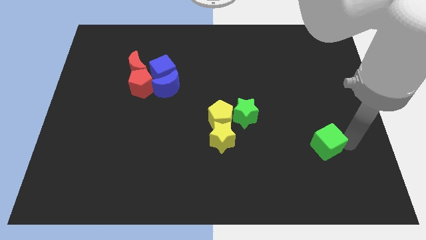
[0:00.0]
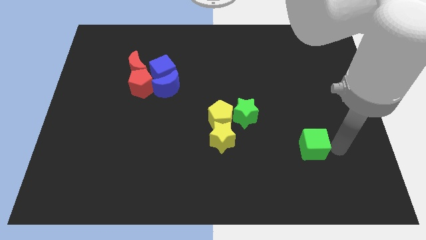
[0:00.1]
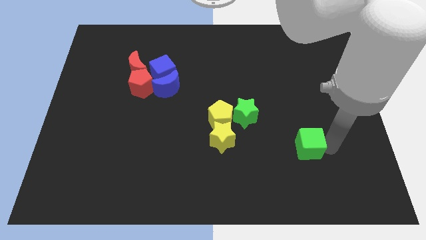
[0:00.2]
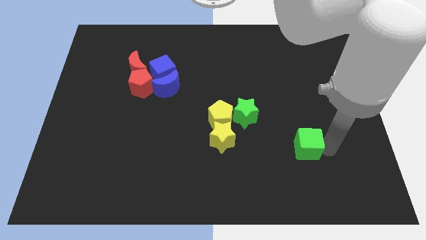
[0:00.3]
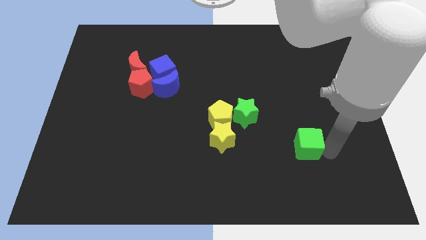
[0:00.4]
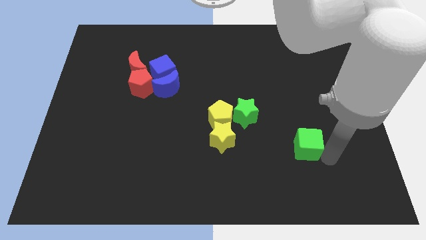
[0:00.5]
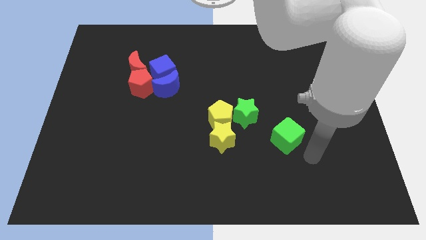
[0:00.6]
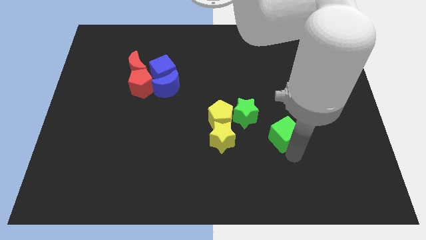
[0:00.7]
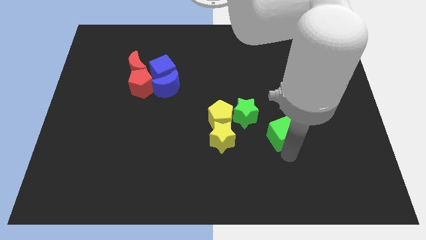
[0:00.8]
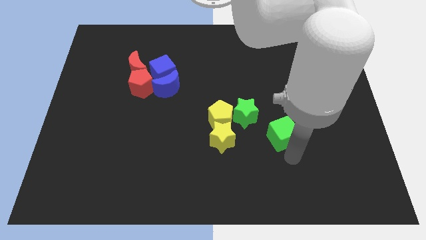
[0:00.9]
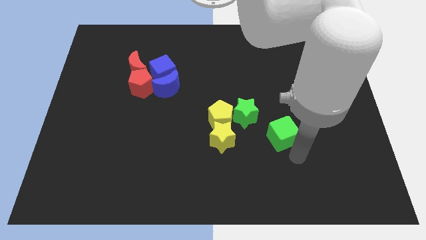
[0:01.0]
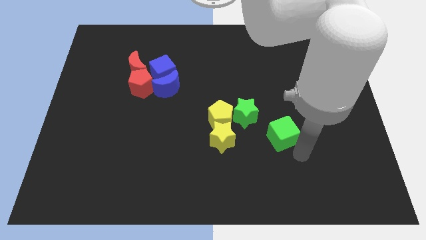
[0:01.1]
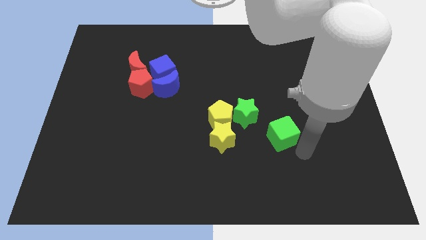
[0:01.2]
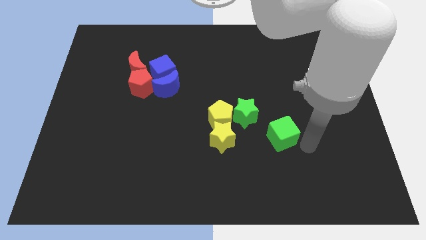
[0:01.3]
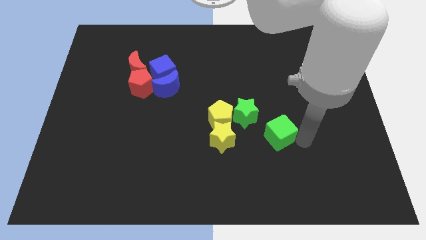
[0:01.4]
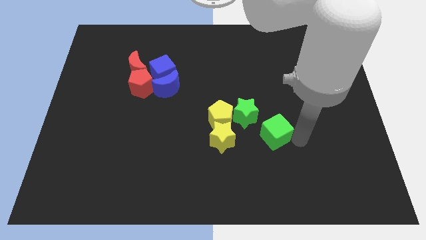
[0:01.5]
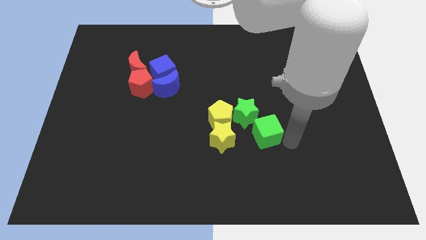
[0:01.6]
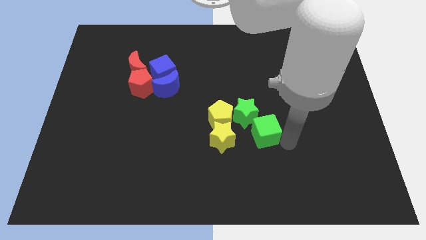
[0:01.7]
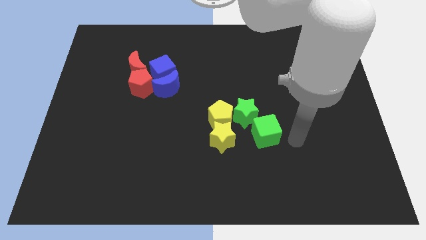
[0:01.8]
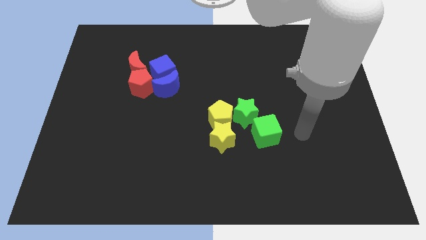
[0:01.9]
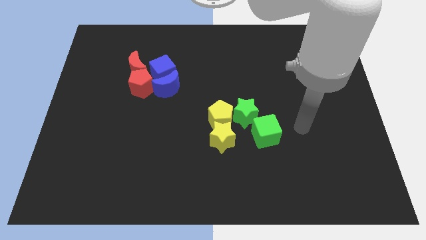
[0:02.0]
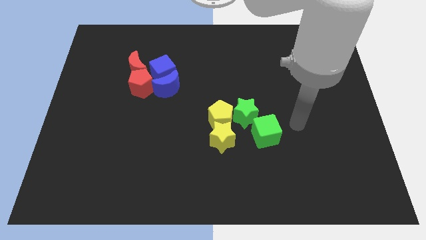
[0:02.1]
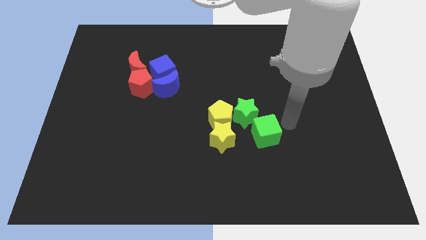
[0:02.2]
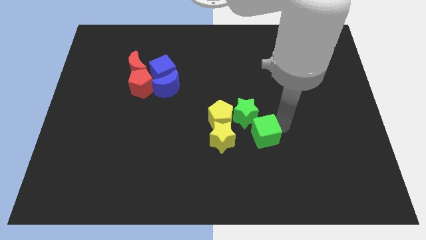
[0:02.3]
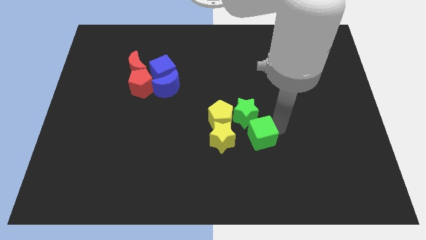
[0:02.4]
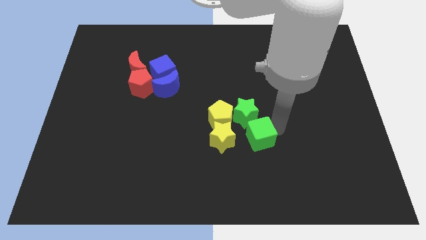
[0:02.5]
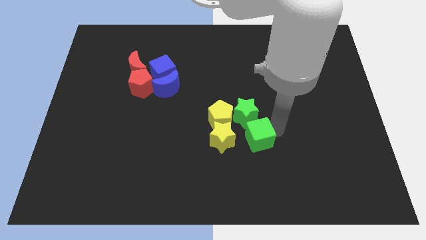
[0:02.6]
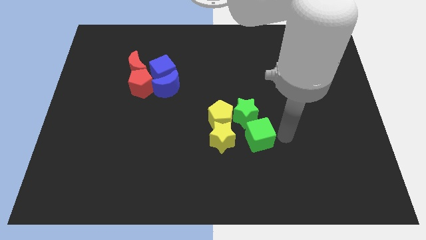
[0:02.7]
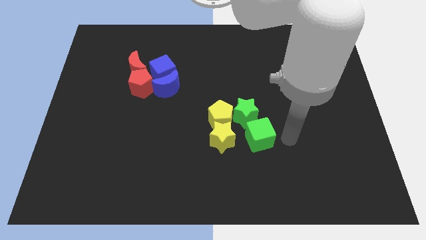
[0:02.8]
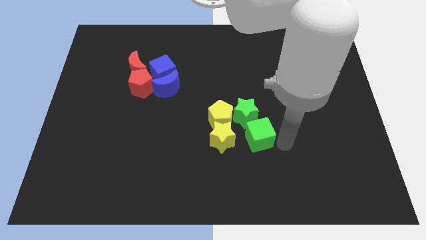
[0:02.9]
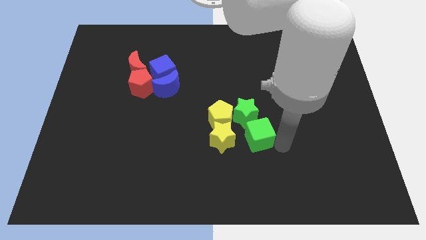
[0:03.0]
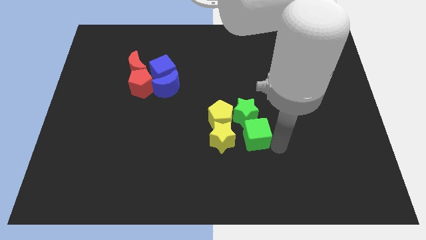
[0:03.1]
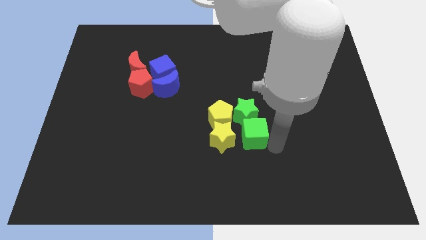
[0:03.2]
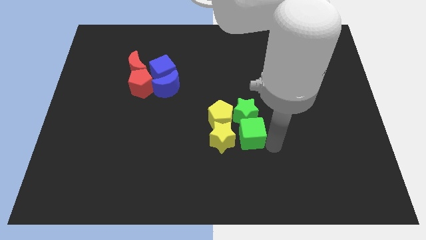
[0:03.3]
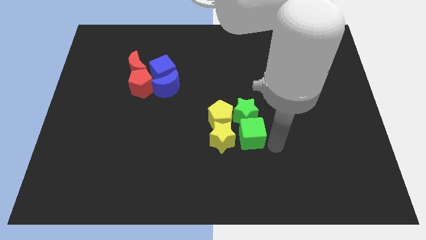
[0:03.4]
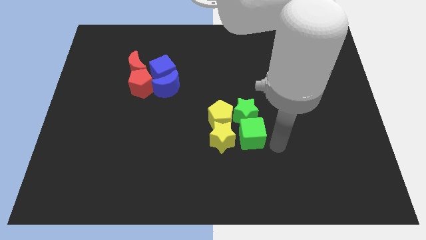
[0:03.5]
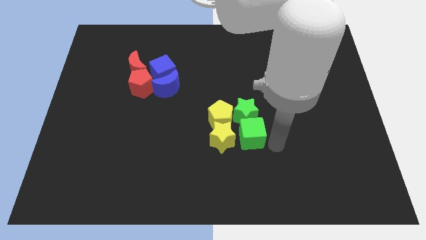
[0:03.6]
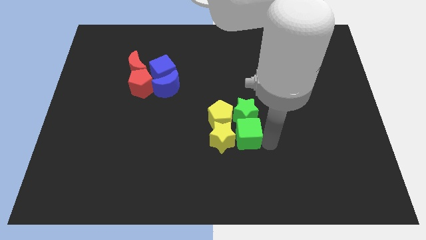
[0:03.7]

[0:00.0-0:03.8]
place the green cube below the green star

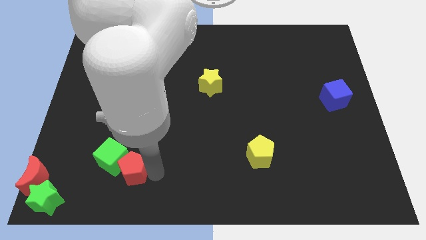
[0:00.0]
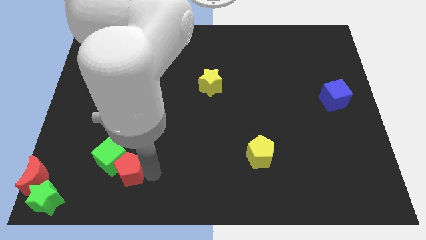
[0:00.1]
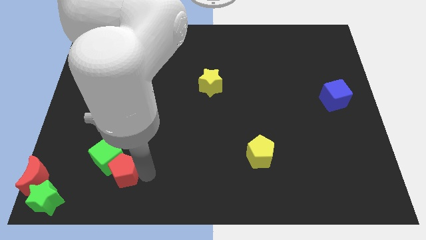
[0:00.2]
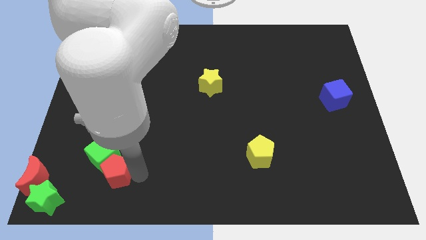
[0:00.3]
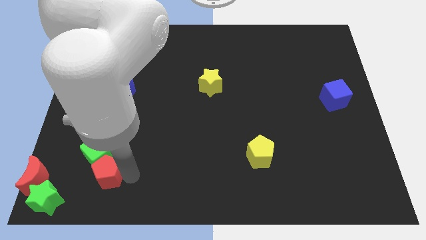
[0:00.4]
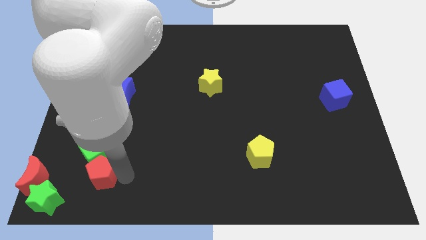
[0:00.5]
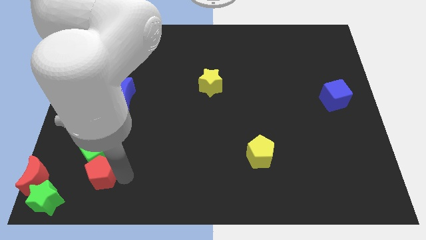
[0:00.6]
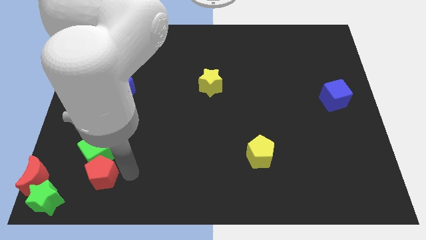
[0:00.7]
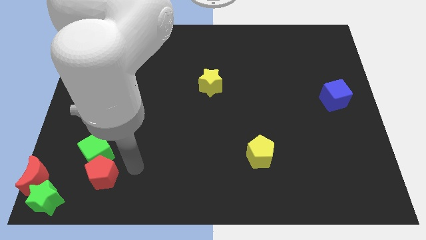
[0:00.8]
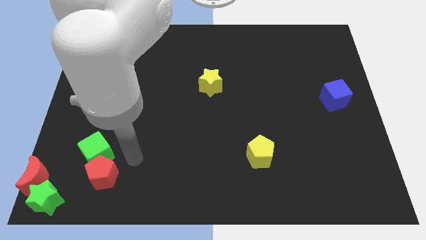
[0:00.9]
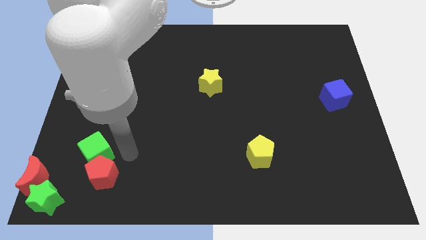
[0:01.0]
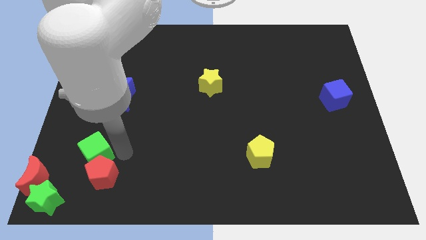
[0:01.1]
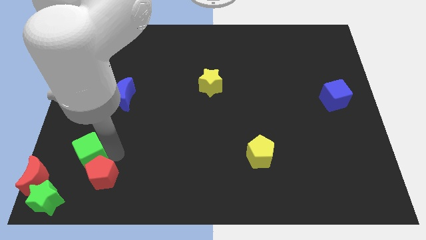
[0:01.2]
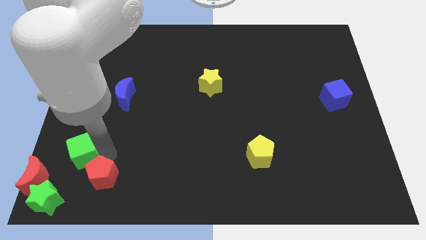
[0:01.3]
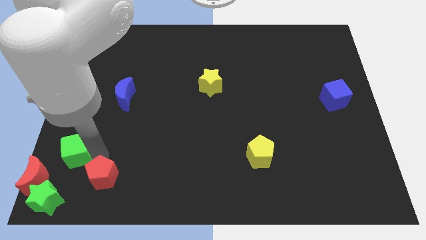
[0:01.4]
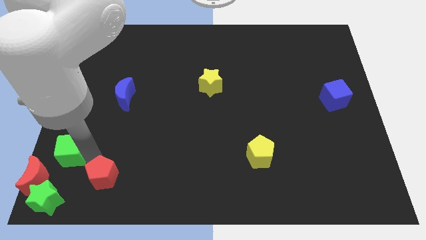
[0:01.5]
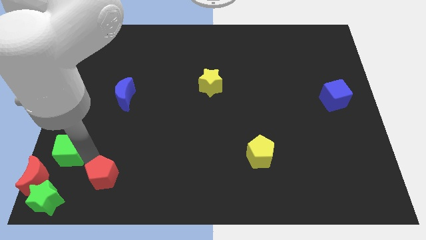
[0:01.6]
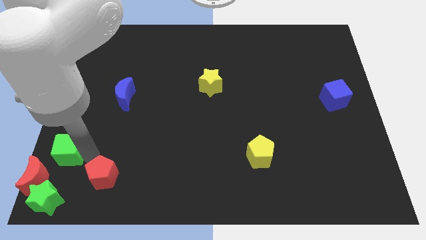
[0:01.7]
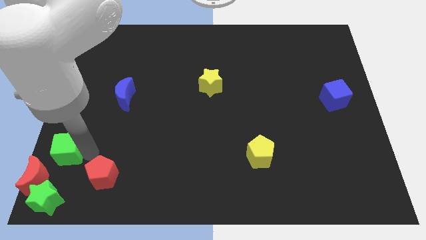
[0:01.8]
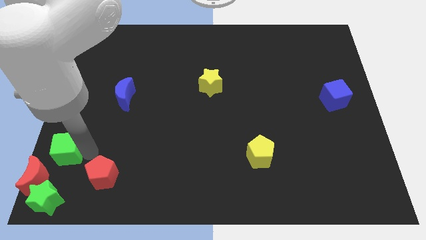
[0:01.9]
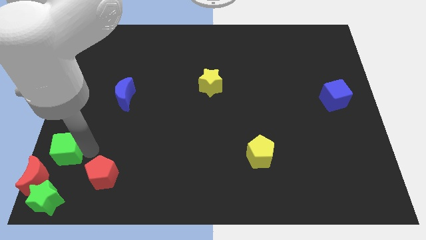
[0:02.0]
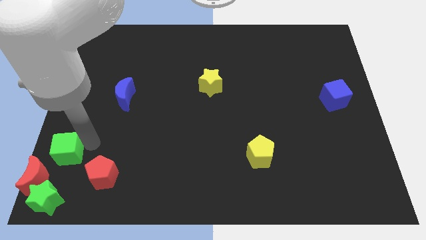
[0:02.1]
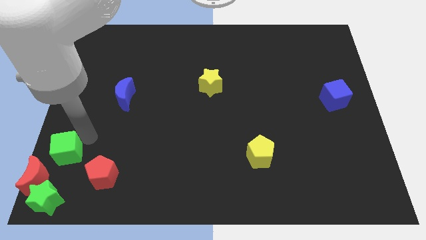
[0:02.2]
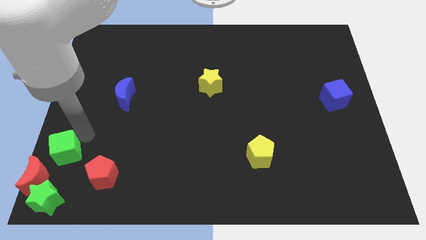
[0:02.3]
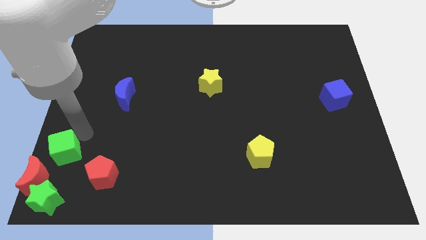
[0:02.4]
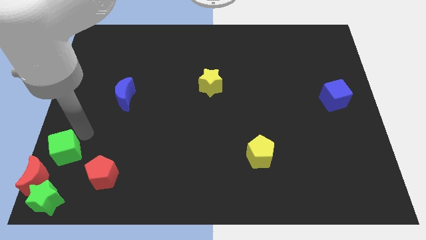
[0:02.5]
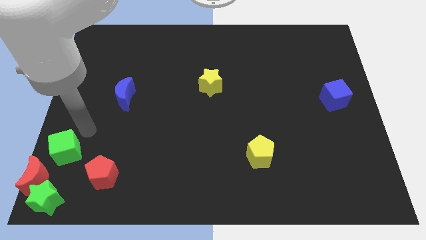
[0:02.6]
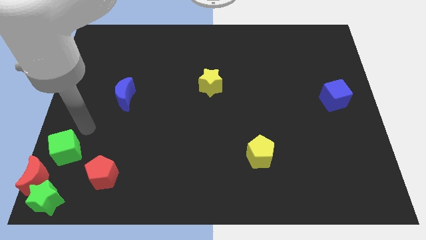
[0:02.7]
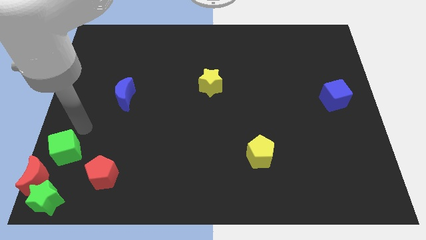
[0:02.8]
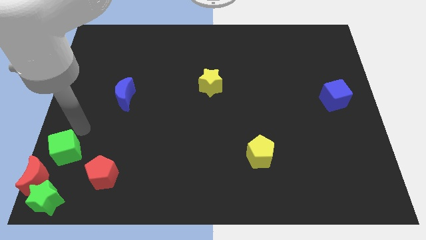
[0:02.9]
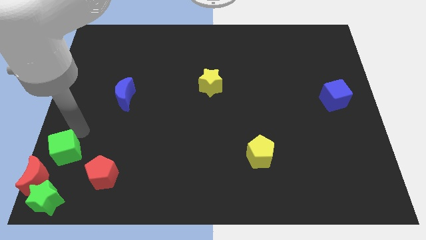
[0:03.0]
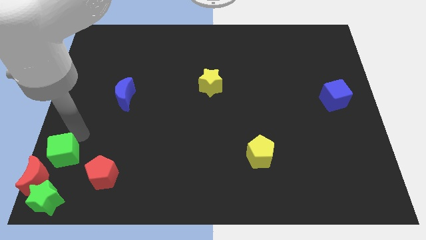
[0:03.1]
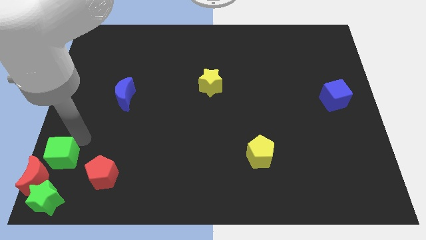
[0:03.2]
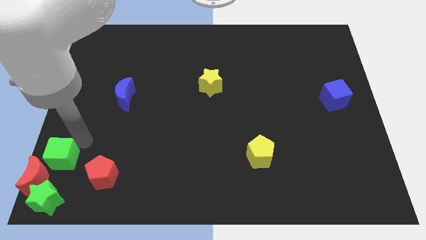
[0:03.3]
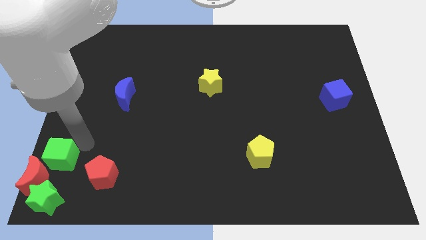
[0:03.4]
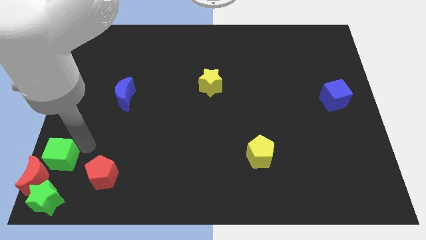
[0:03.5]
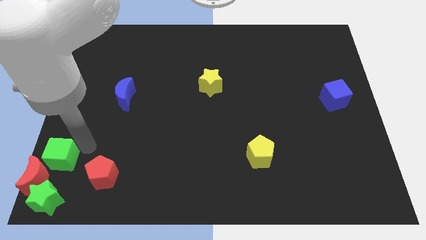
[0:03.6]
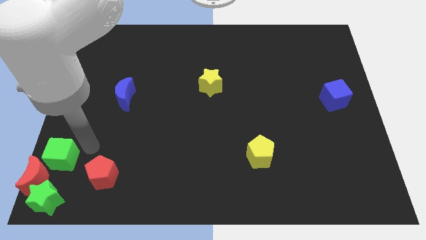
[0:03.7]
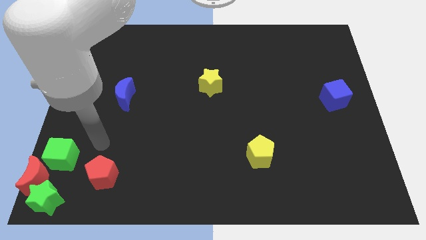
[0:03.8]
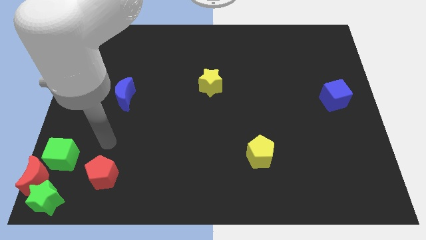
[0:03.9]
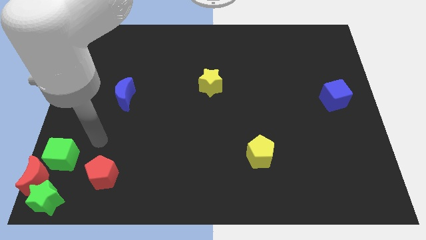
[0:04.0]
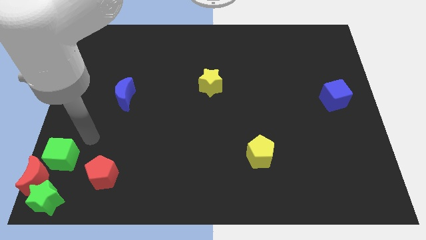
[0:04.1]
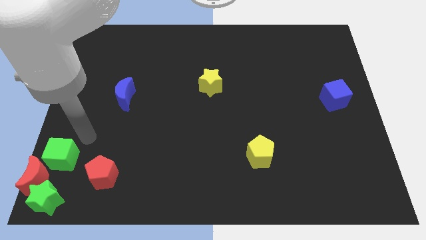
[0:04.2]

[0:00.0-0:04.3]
move the green cube close to the red moon

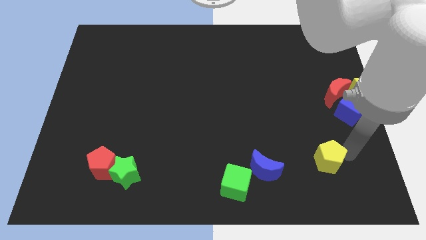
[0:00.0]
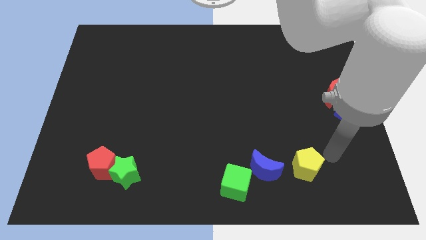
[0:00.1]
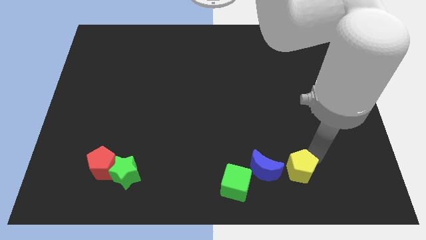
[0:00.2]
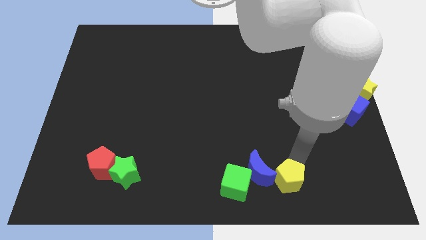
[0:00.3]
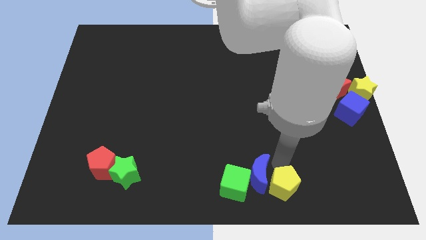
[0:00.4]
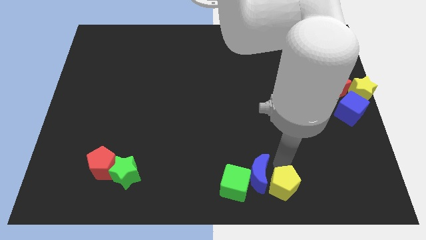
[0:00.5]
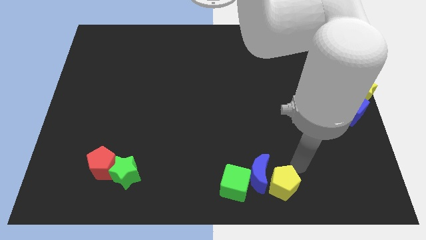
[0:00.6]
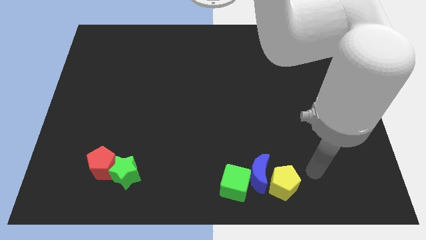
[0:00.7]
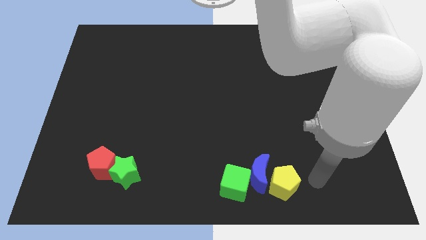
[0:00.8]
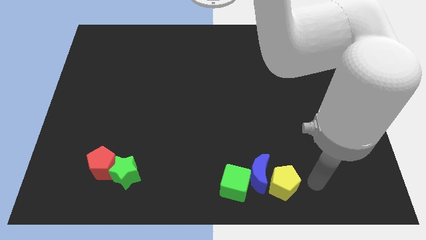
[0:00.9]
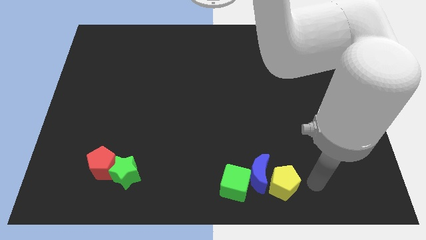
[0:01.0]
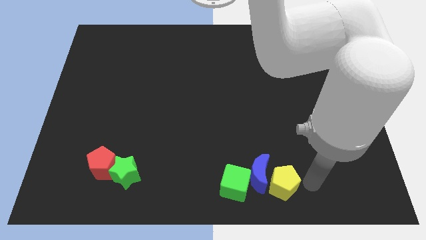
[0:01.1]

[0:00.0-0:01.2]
move the yellow pentagon to the right side of the blue crescent
